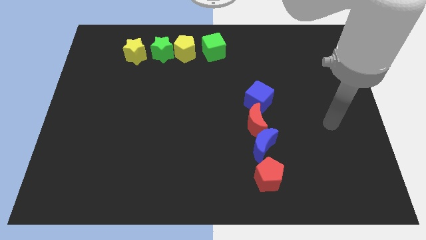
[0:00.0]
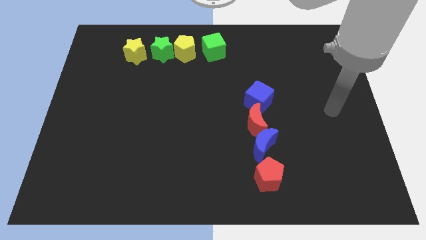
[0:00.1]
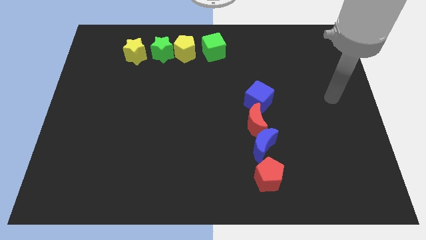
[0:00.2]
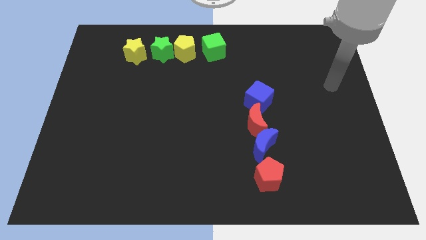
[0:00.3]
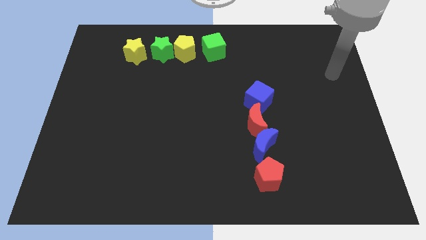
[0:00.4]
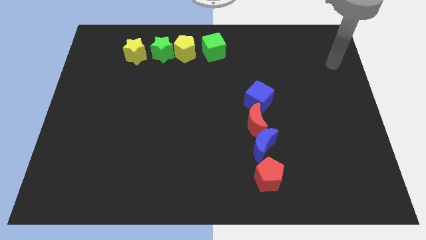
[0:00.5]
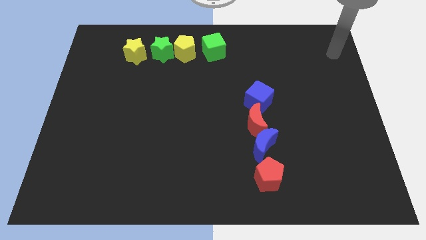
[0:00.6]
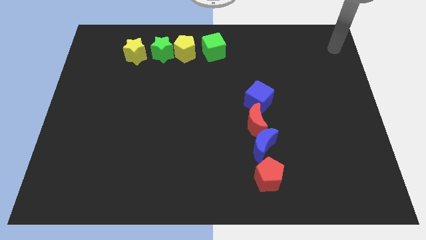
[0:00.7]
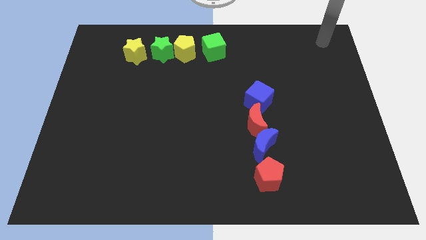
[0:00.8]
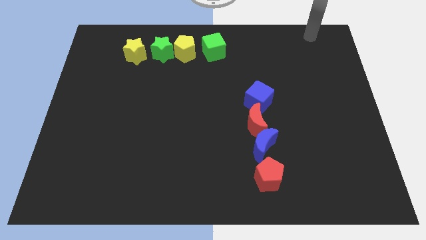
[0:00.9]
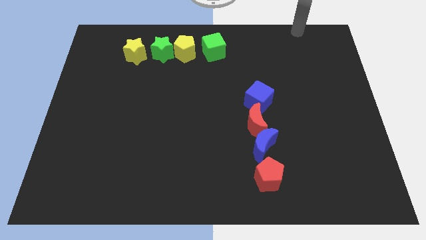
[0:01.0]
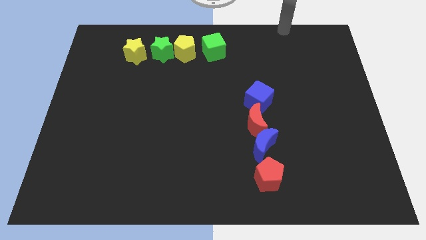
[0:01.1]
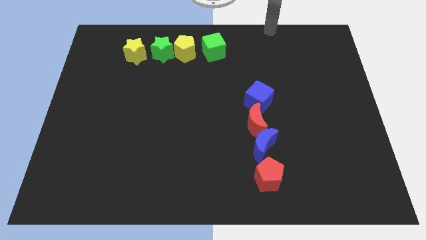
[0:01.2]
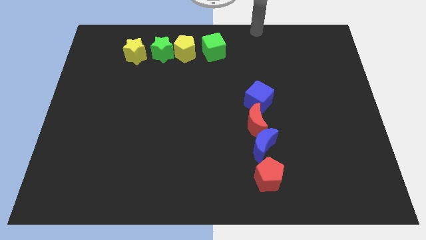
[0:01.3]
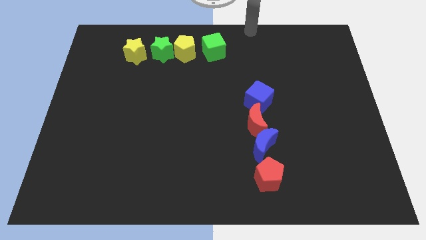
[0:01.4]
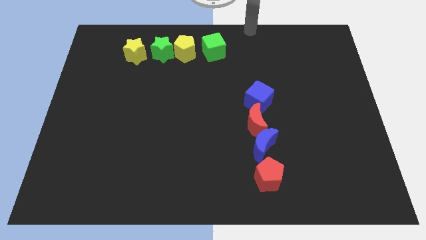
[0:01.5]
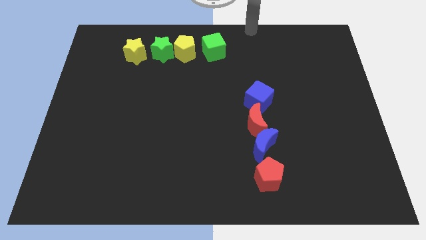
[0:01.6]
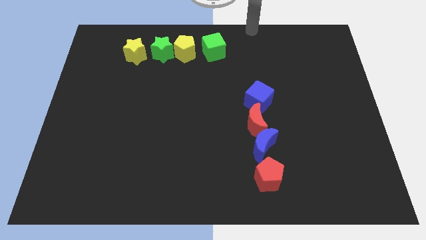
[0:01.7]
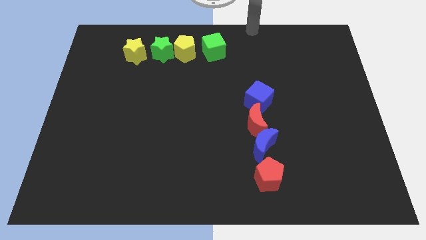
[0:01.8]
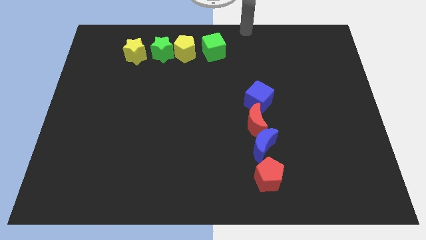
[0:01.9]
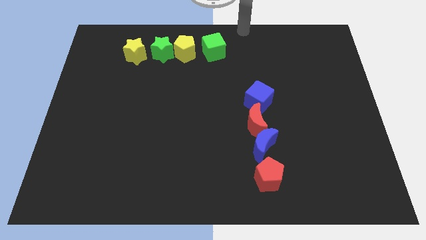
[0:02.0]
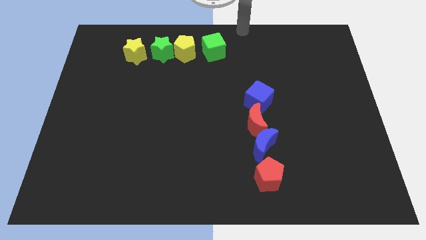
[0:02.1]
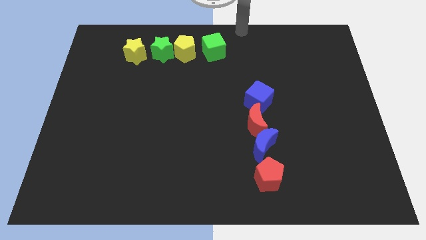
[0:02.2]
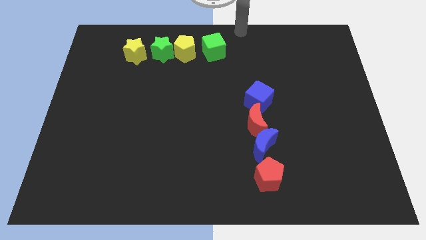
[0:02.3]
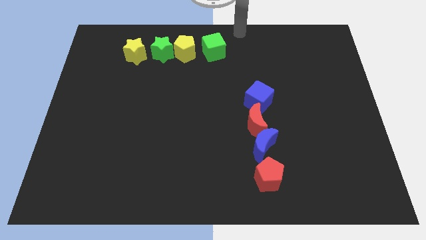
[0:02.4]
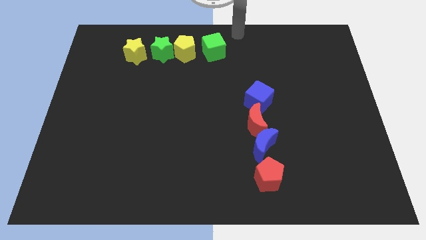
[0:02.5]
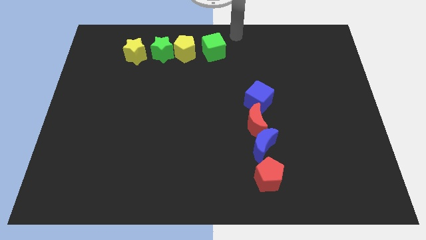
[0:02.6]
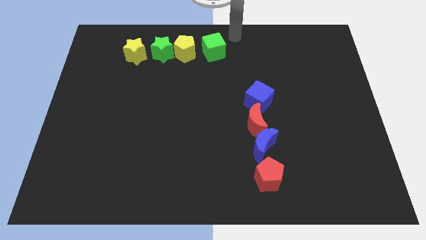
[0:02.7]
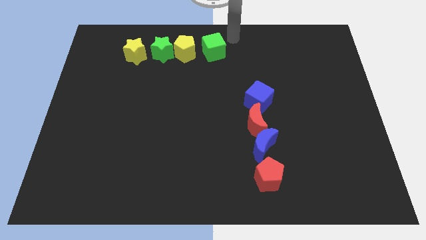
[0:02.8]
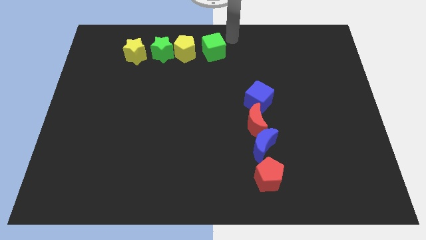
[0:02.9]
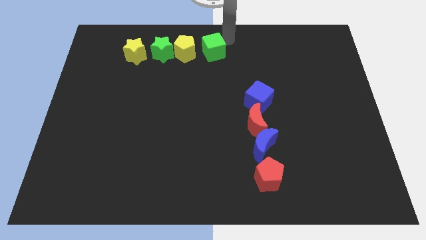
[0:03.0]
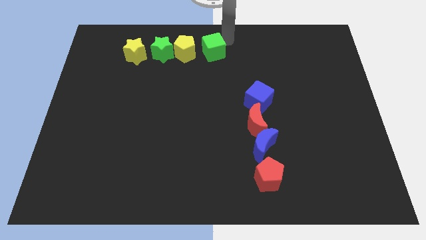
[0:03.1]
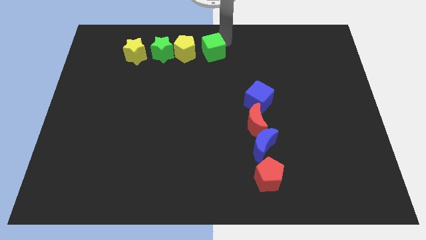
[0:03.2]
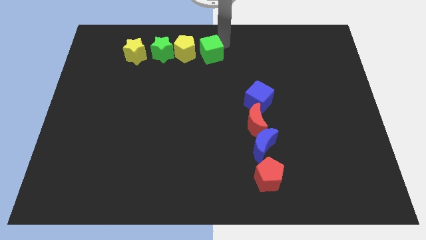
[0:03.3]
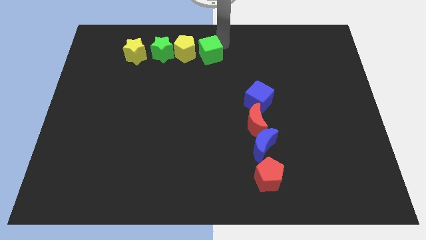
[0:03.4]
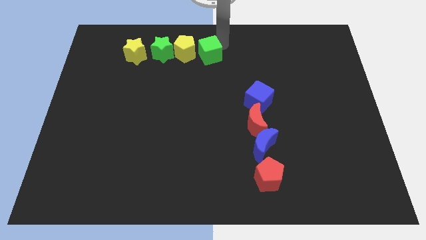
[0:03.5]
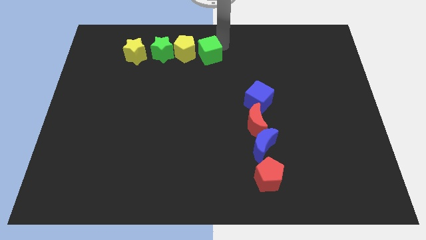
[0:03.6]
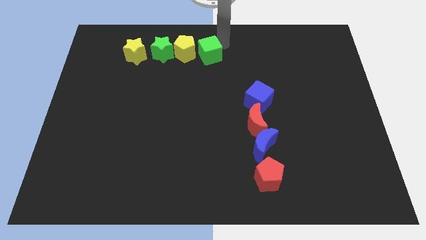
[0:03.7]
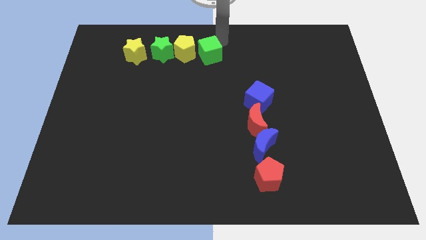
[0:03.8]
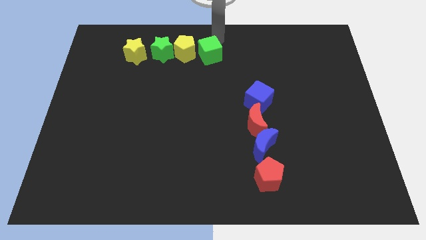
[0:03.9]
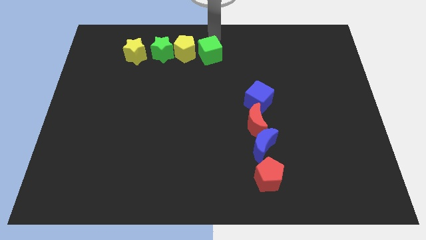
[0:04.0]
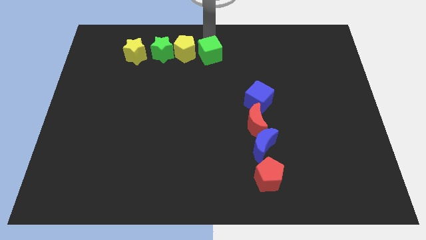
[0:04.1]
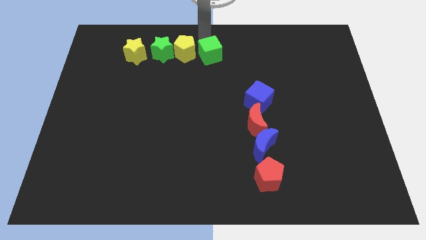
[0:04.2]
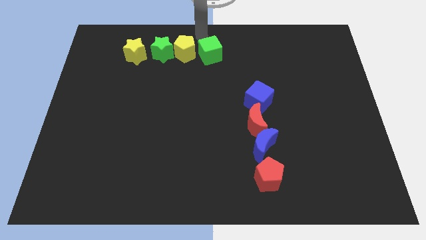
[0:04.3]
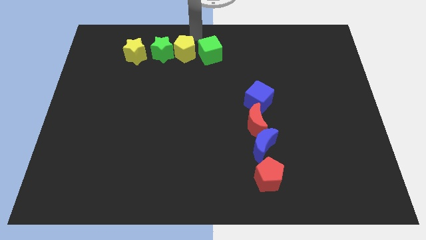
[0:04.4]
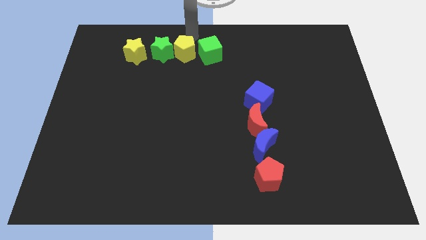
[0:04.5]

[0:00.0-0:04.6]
slide the green cube slightly to the left

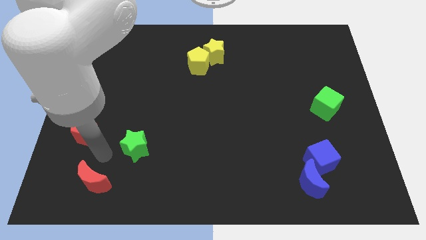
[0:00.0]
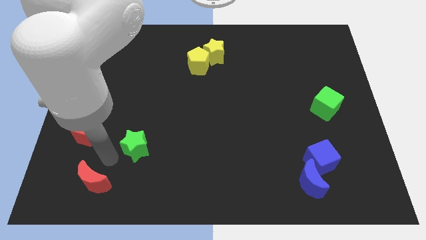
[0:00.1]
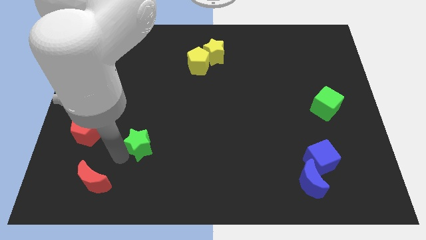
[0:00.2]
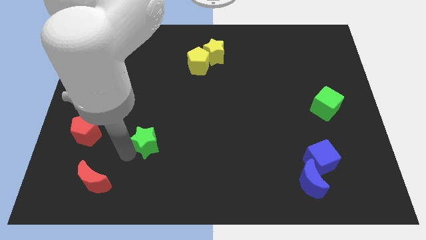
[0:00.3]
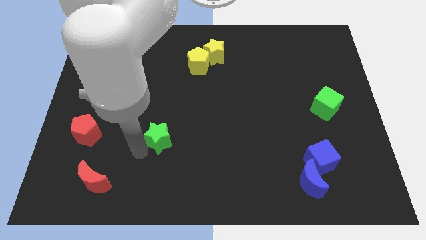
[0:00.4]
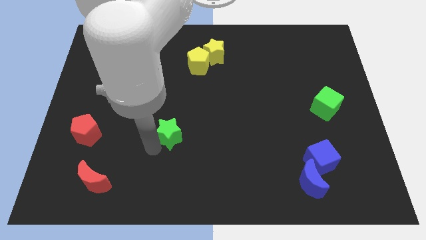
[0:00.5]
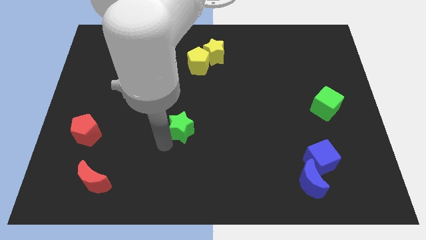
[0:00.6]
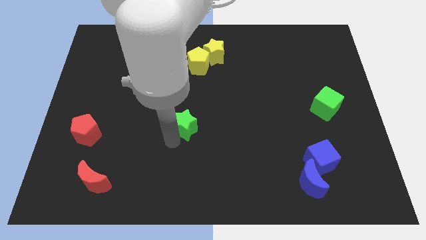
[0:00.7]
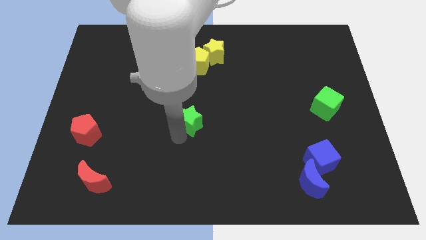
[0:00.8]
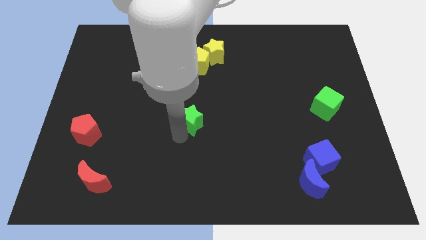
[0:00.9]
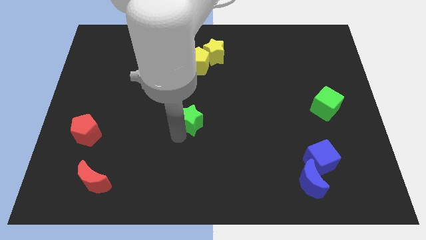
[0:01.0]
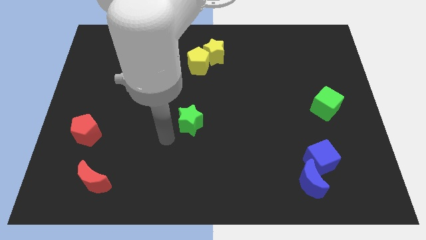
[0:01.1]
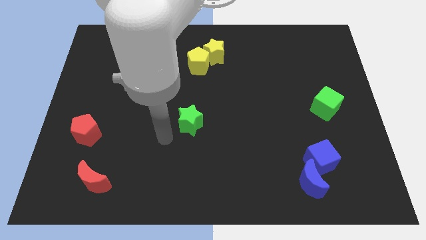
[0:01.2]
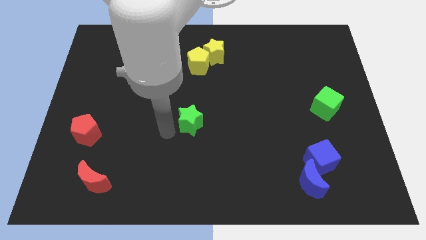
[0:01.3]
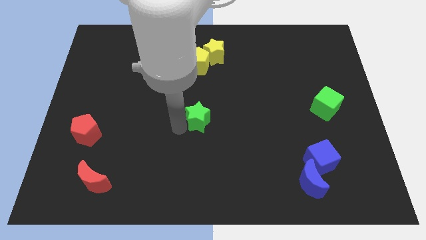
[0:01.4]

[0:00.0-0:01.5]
place the green star vertical to the yellow pentagon

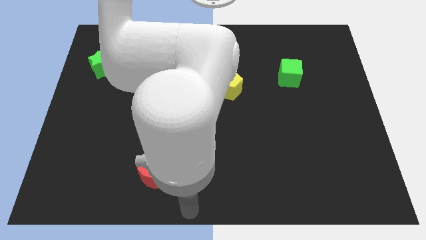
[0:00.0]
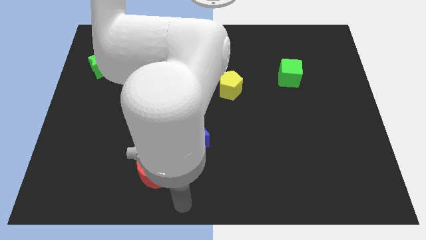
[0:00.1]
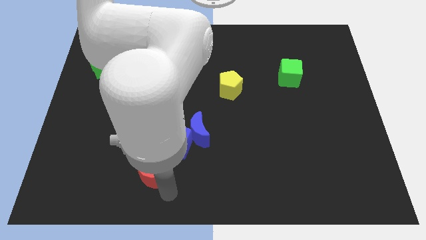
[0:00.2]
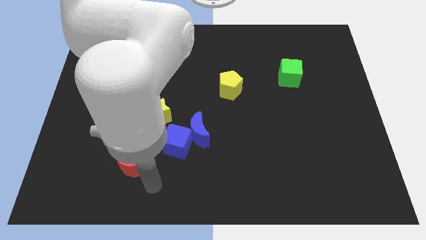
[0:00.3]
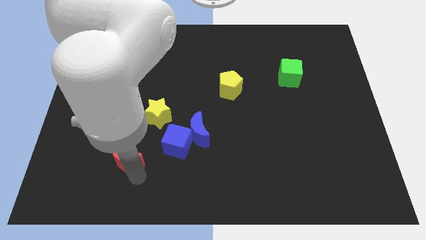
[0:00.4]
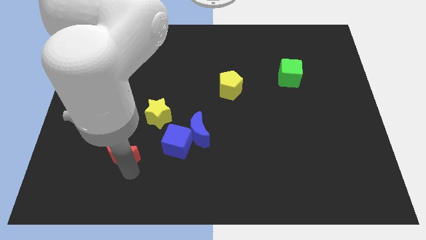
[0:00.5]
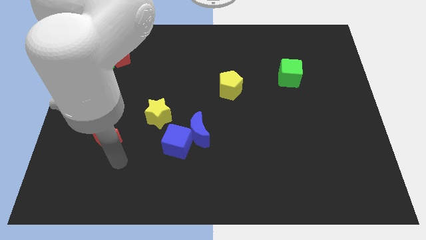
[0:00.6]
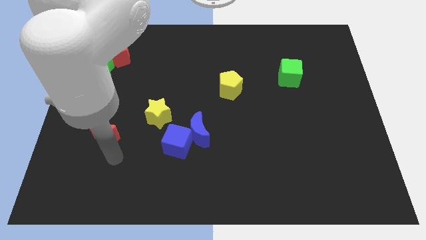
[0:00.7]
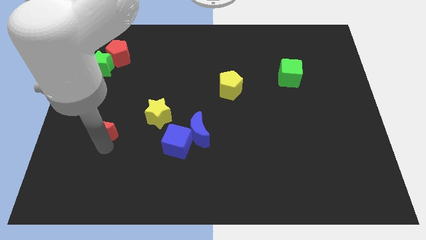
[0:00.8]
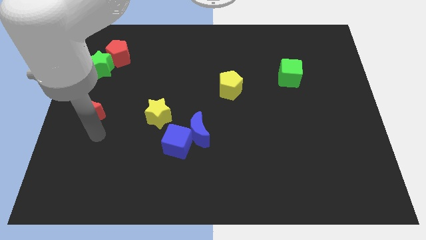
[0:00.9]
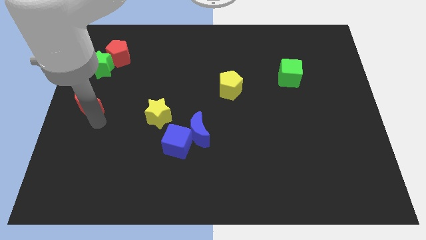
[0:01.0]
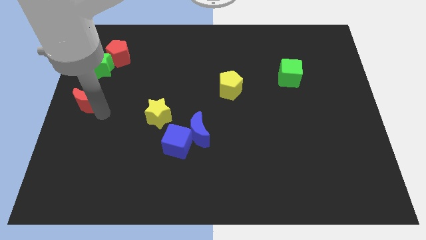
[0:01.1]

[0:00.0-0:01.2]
move red moon to the bottom side of the green star

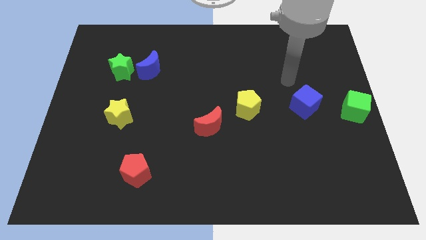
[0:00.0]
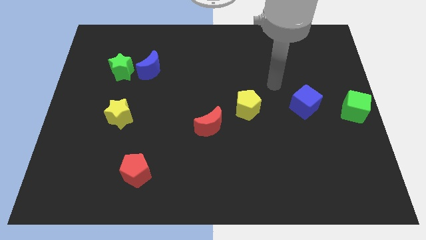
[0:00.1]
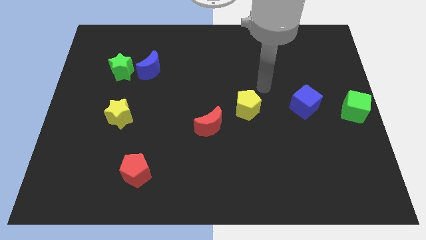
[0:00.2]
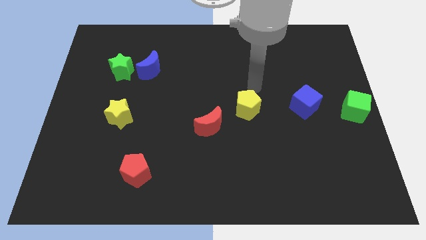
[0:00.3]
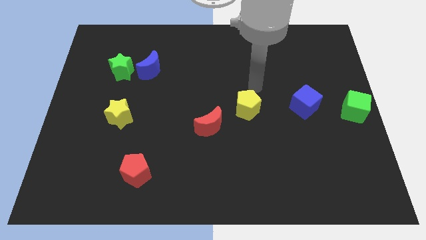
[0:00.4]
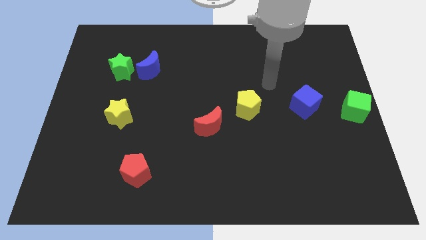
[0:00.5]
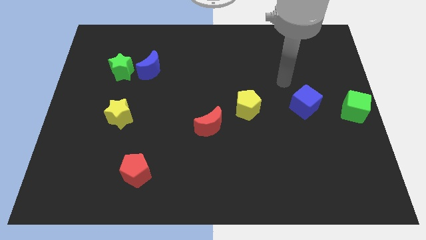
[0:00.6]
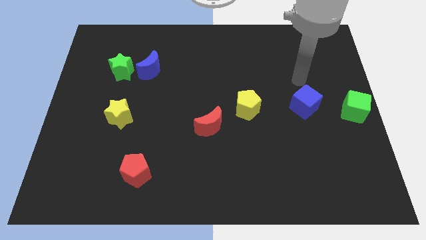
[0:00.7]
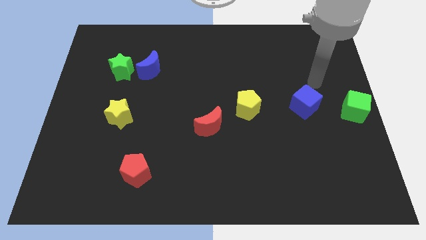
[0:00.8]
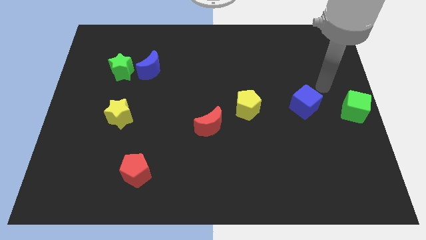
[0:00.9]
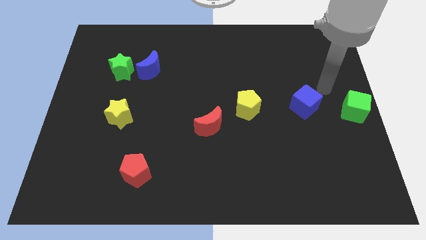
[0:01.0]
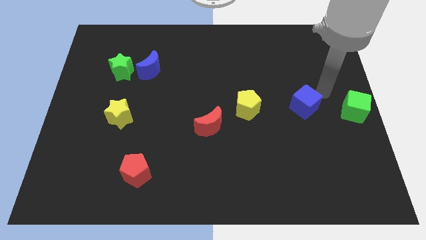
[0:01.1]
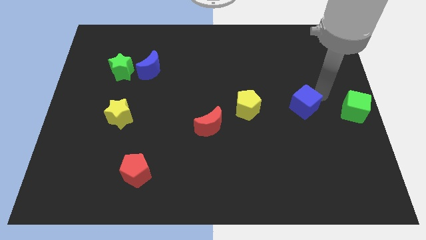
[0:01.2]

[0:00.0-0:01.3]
place your arm to the top right side of the blue cube

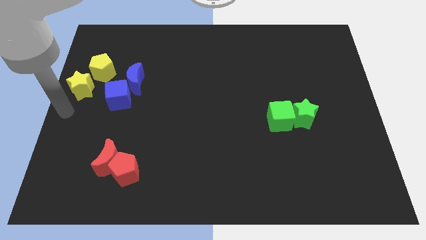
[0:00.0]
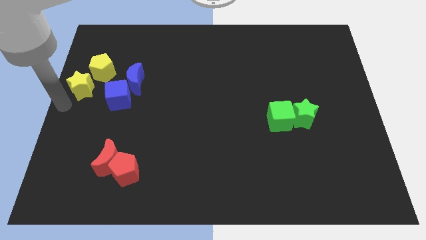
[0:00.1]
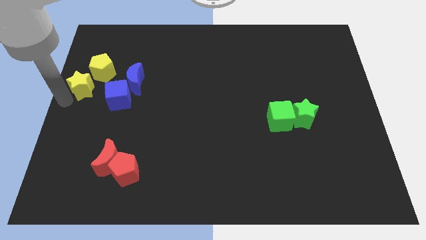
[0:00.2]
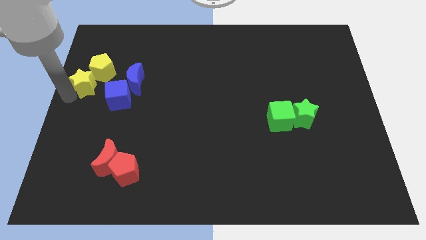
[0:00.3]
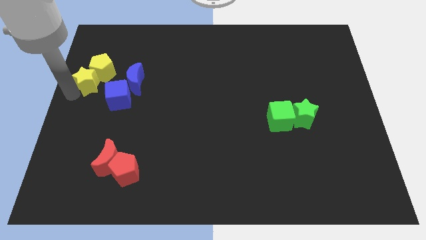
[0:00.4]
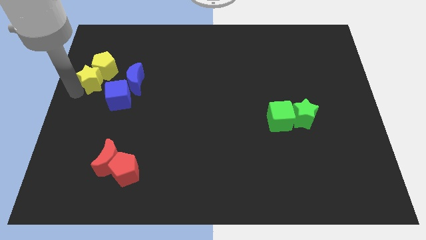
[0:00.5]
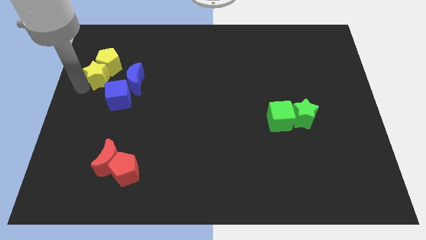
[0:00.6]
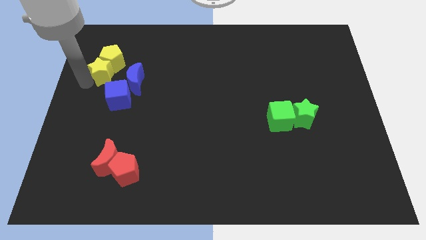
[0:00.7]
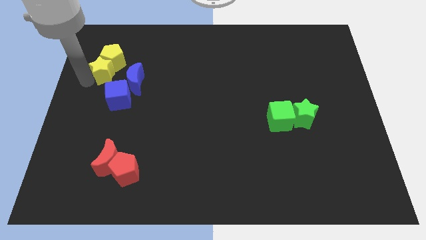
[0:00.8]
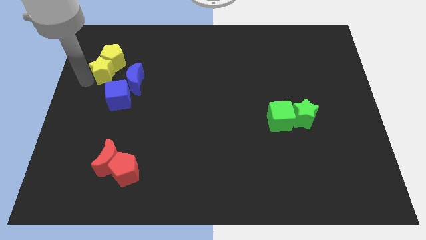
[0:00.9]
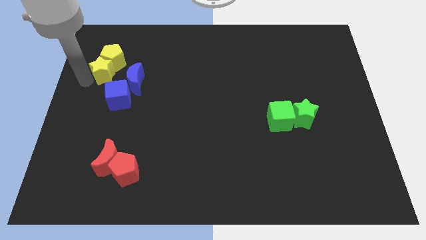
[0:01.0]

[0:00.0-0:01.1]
push the yellow star into the yellow pentagon
